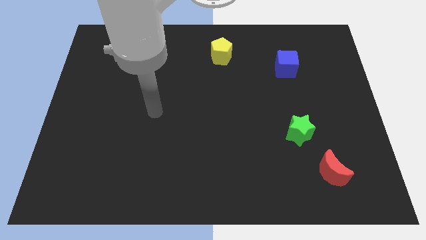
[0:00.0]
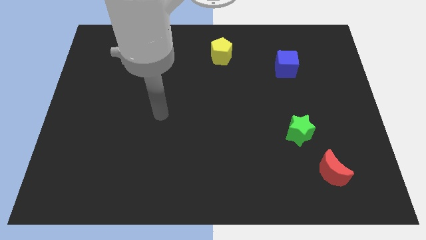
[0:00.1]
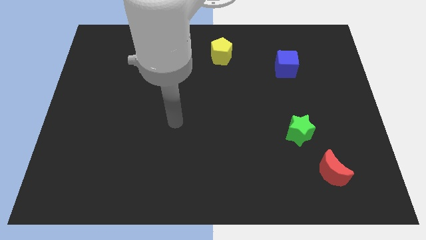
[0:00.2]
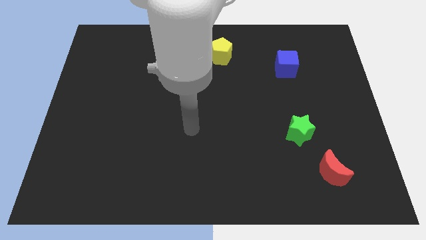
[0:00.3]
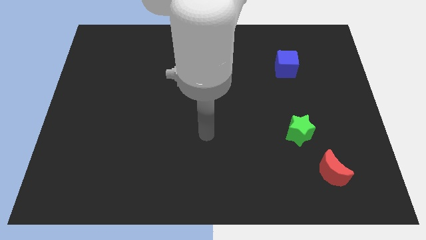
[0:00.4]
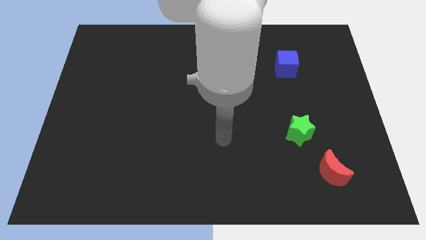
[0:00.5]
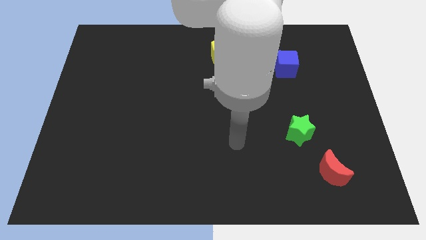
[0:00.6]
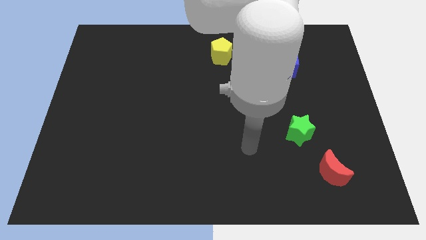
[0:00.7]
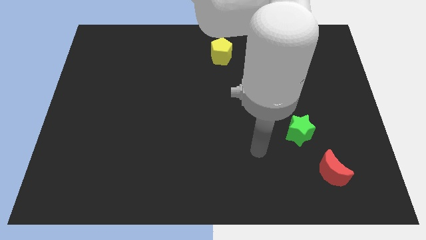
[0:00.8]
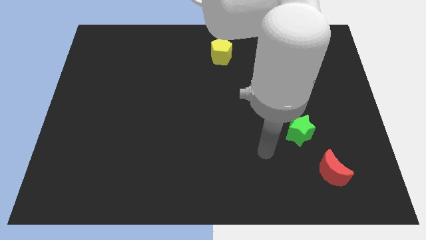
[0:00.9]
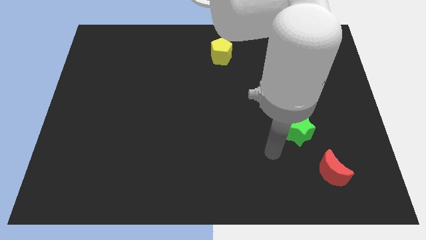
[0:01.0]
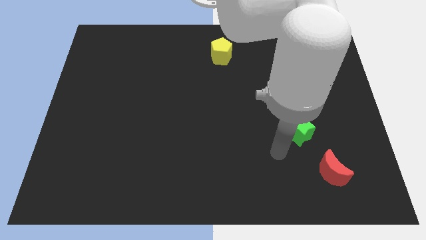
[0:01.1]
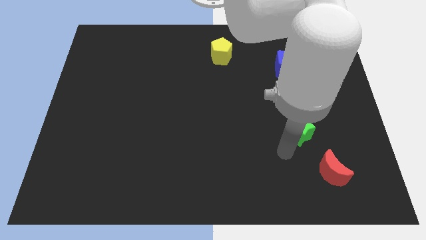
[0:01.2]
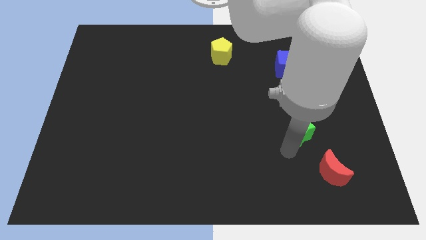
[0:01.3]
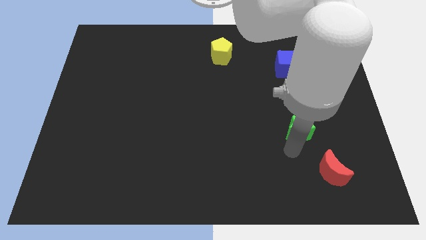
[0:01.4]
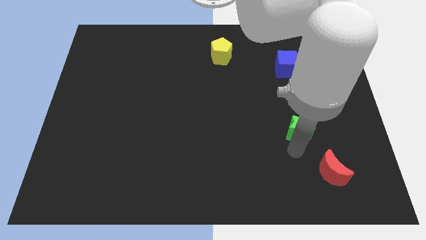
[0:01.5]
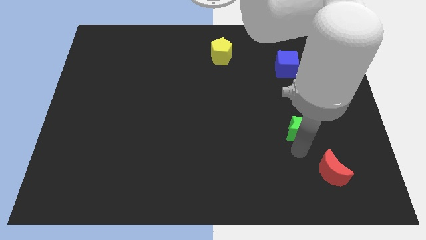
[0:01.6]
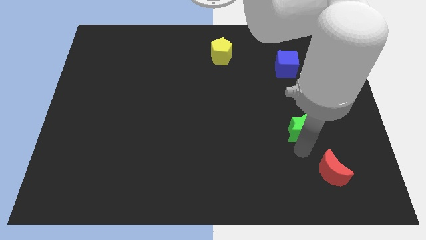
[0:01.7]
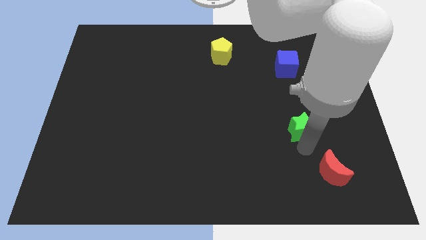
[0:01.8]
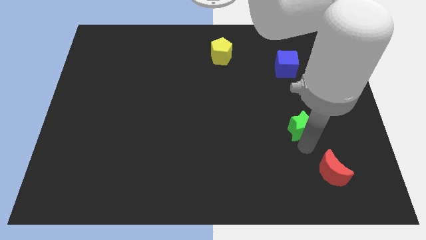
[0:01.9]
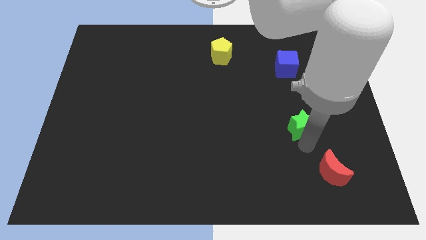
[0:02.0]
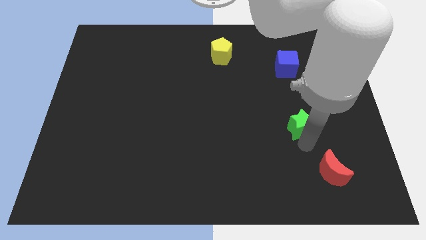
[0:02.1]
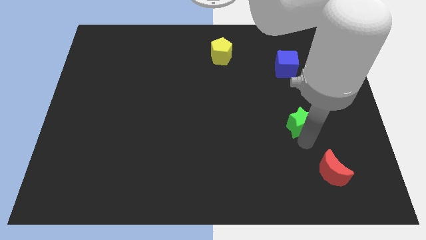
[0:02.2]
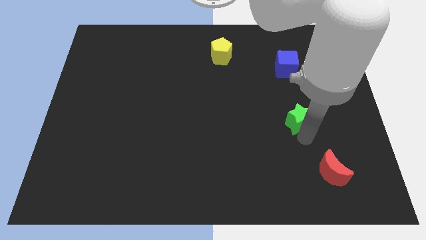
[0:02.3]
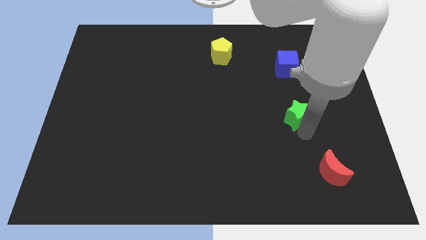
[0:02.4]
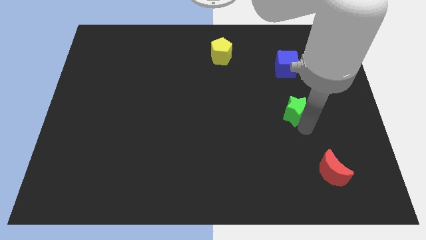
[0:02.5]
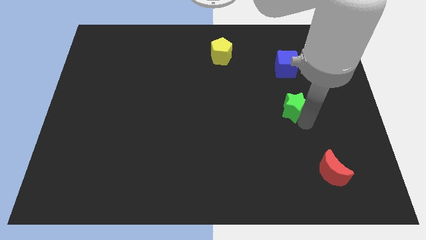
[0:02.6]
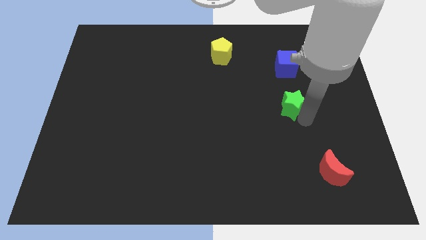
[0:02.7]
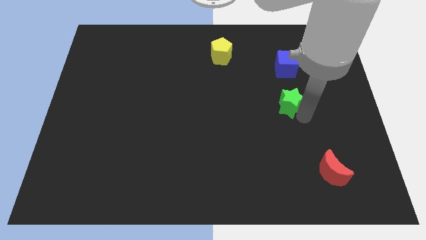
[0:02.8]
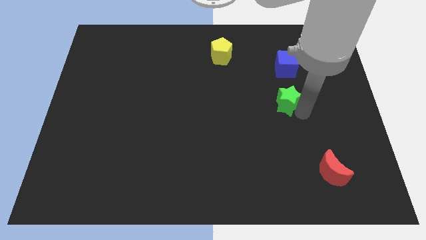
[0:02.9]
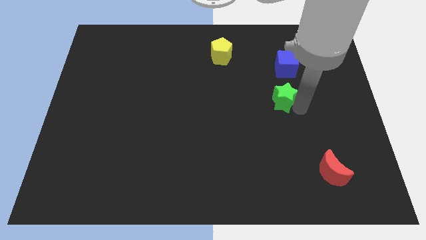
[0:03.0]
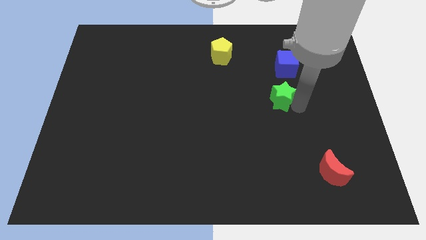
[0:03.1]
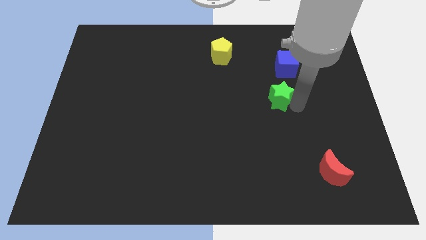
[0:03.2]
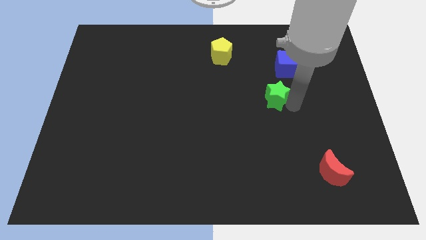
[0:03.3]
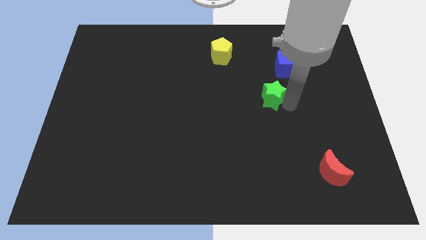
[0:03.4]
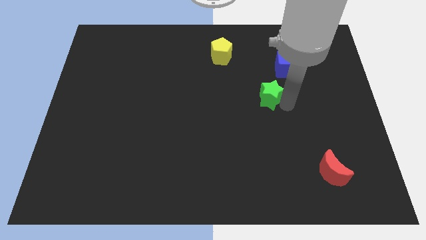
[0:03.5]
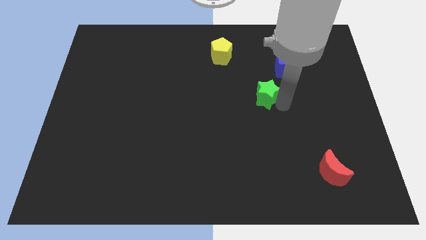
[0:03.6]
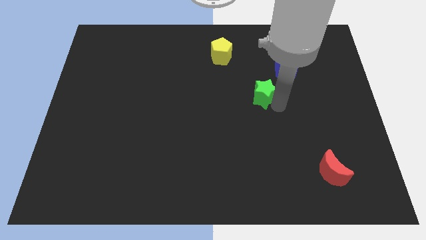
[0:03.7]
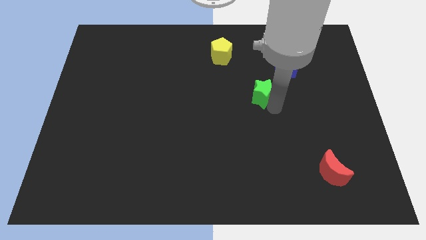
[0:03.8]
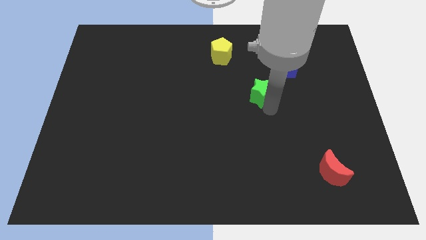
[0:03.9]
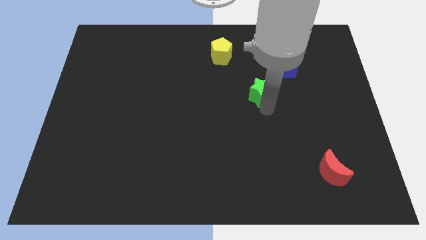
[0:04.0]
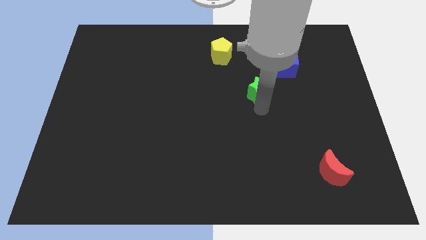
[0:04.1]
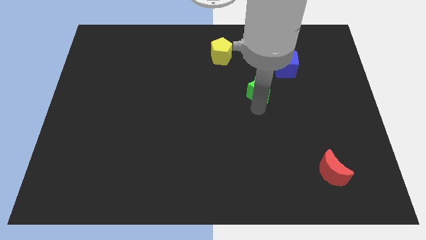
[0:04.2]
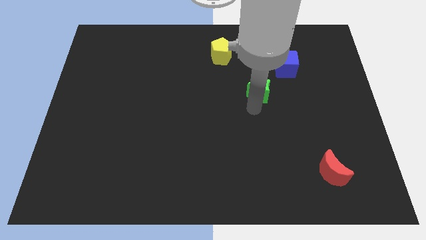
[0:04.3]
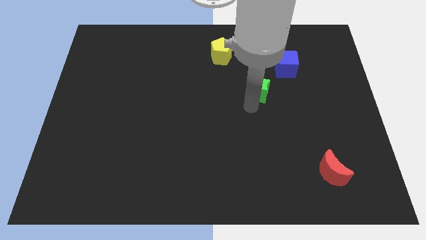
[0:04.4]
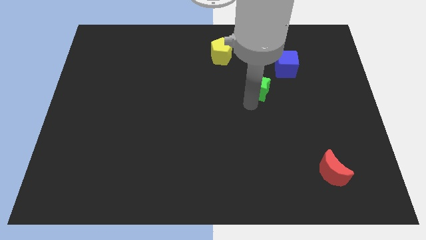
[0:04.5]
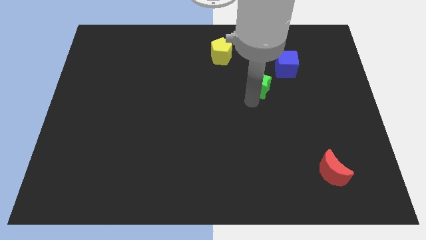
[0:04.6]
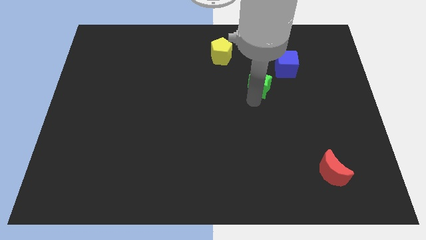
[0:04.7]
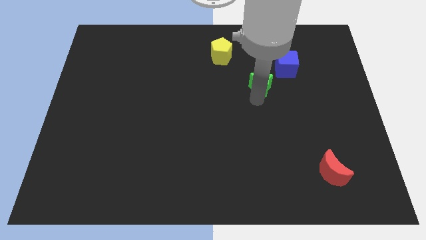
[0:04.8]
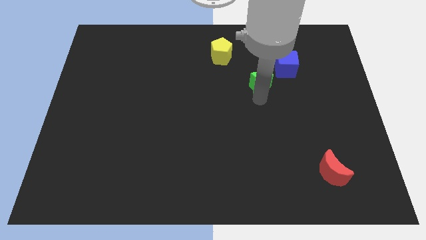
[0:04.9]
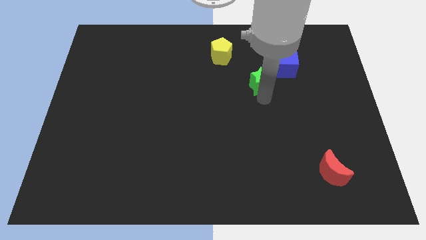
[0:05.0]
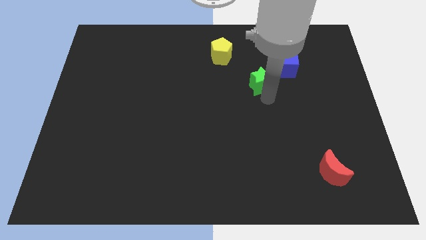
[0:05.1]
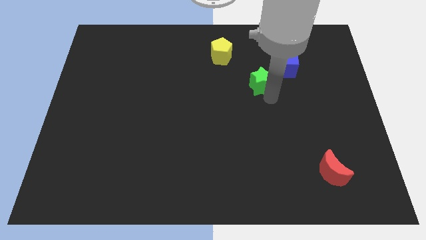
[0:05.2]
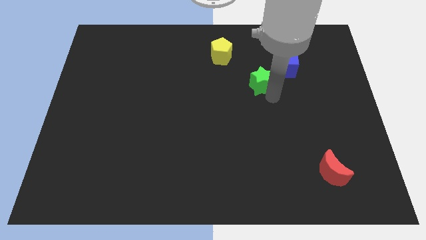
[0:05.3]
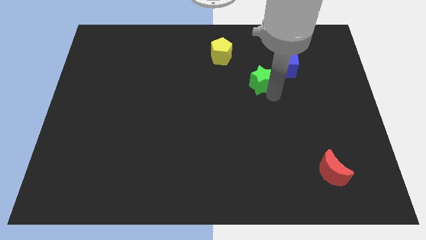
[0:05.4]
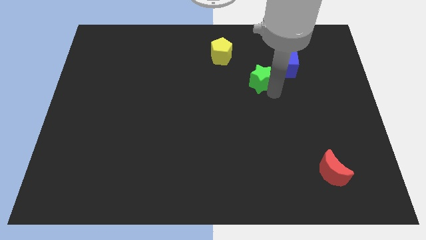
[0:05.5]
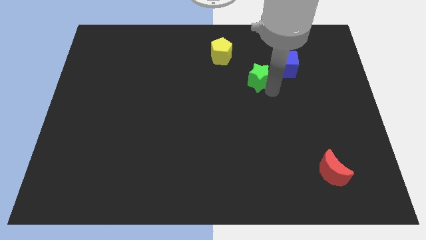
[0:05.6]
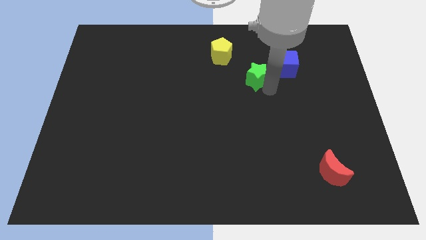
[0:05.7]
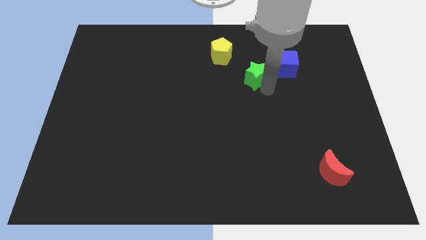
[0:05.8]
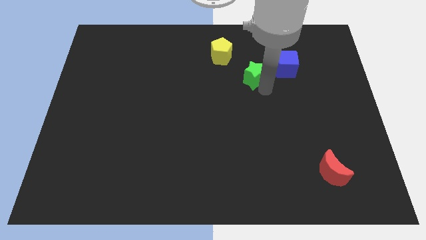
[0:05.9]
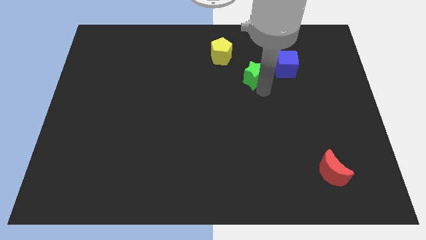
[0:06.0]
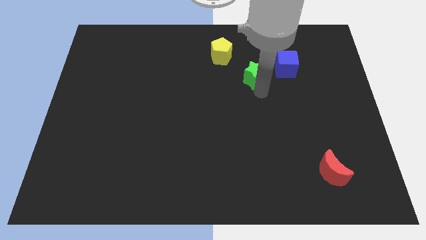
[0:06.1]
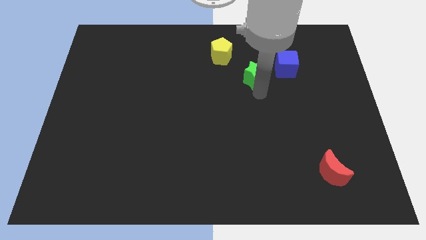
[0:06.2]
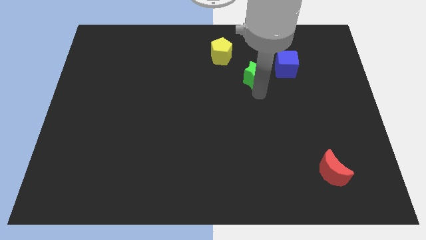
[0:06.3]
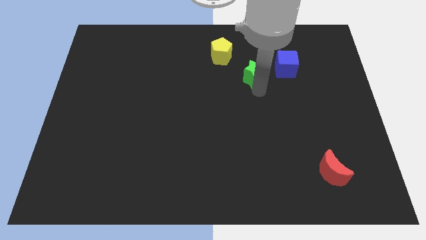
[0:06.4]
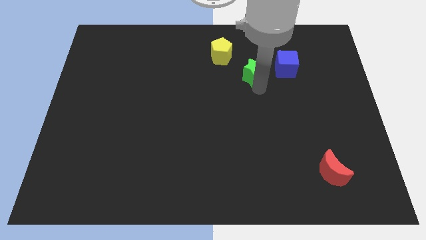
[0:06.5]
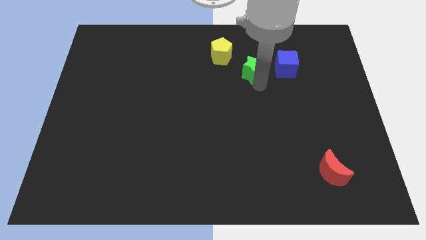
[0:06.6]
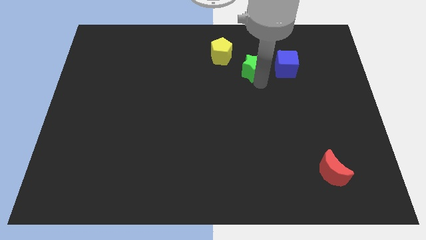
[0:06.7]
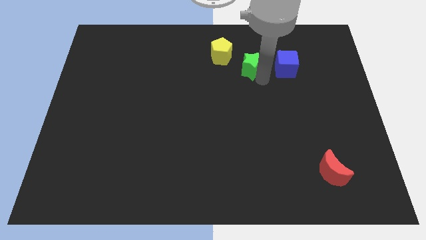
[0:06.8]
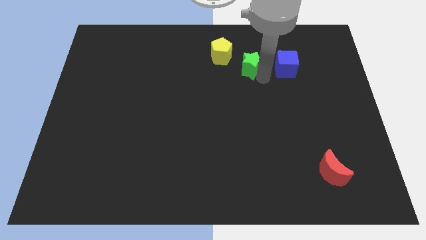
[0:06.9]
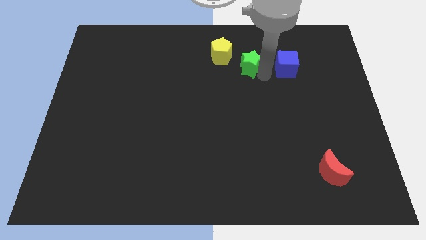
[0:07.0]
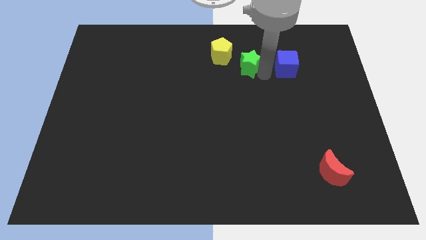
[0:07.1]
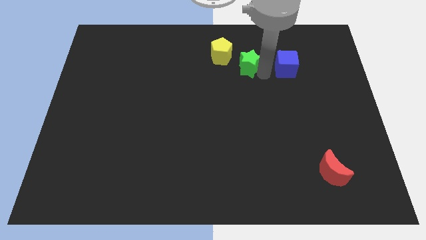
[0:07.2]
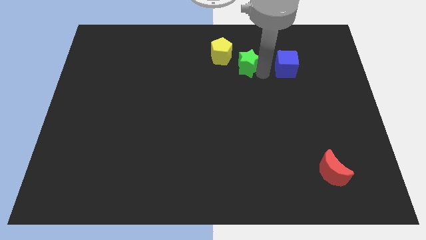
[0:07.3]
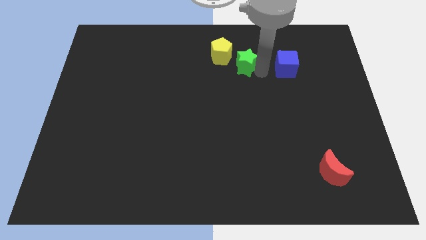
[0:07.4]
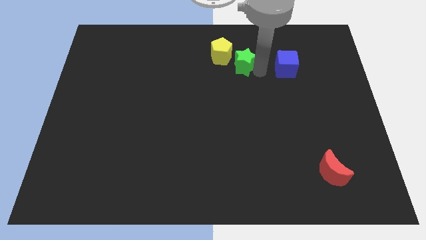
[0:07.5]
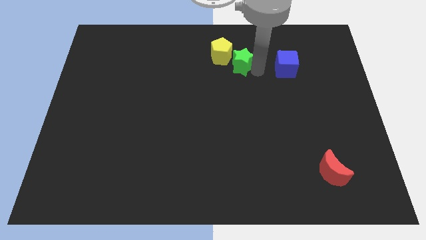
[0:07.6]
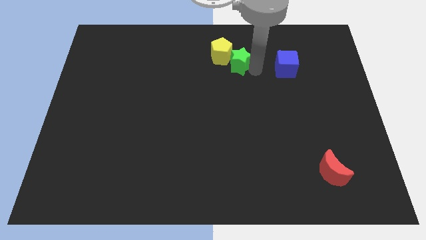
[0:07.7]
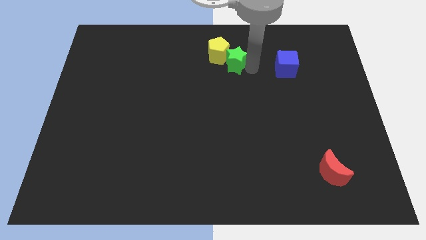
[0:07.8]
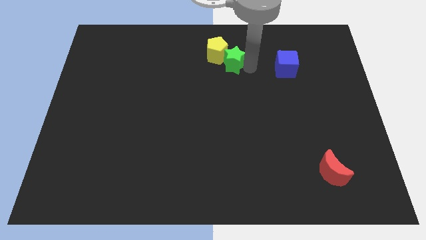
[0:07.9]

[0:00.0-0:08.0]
slide the green block close to the yellow block
